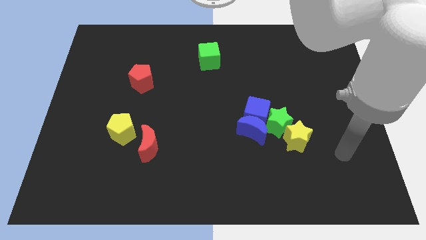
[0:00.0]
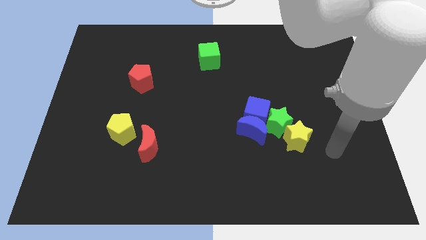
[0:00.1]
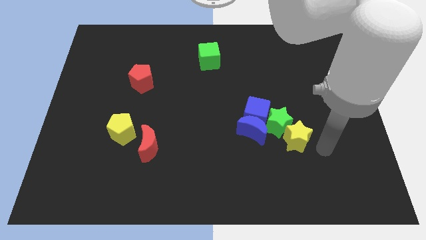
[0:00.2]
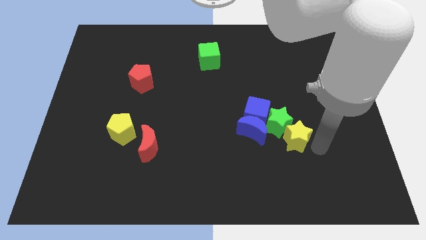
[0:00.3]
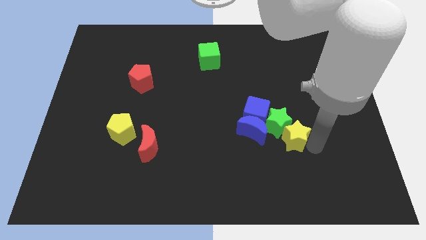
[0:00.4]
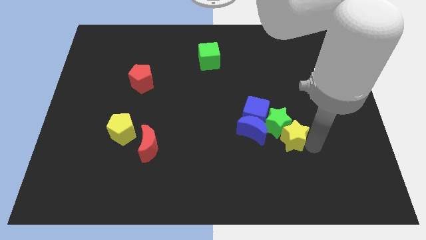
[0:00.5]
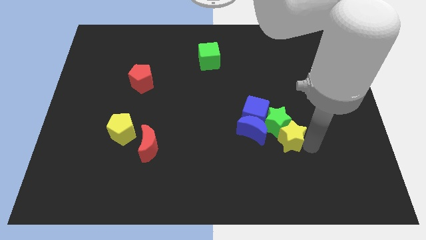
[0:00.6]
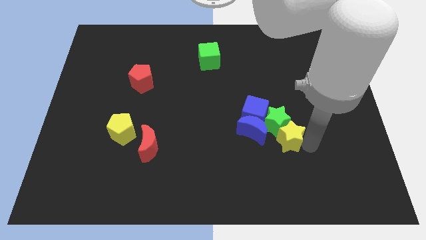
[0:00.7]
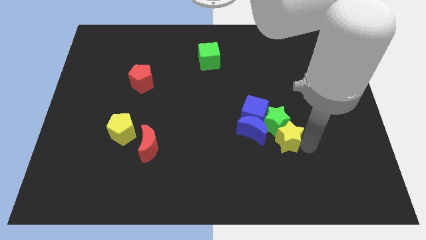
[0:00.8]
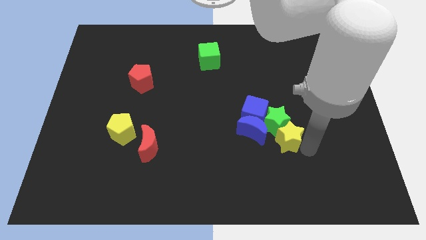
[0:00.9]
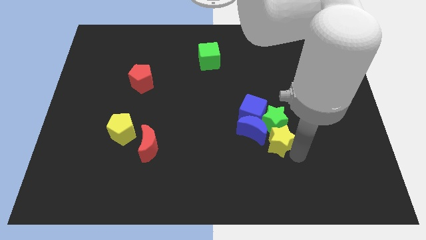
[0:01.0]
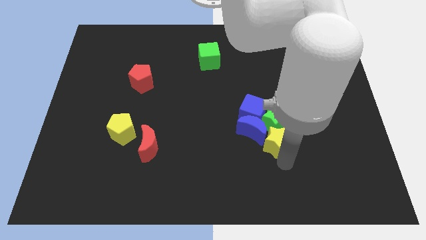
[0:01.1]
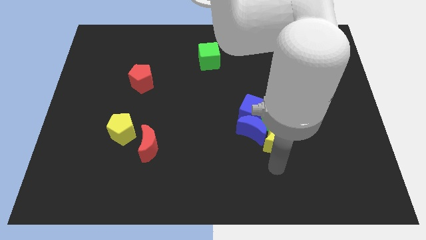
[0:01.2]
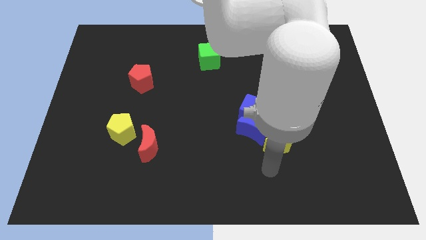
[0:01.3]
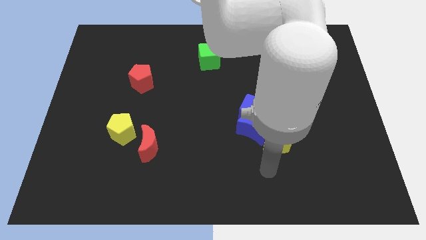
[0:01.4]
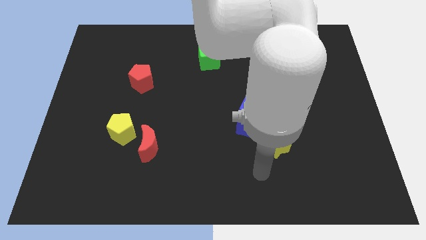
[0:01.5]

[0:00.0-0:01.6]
place the yellow star to the right of the blue crescent

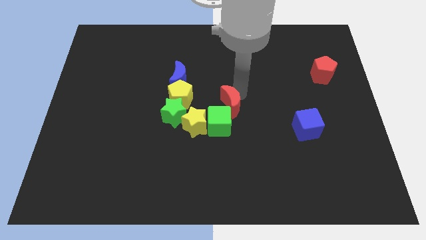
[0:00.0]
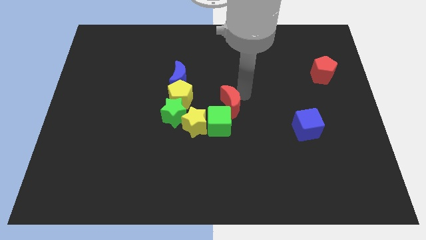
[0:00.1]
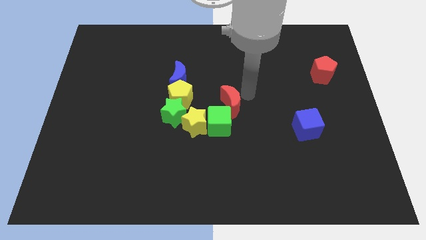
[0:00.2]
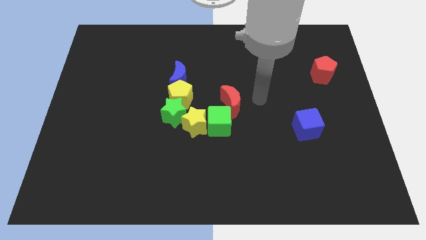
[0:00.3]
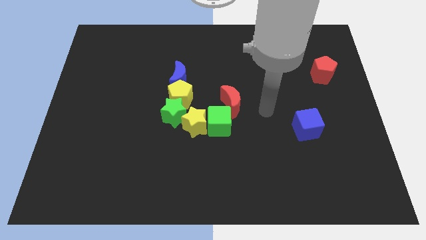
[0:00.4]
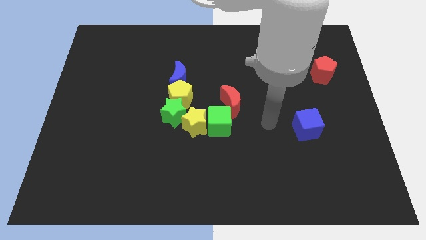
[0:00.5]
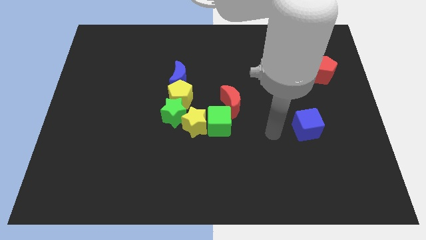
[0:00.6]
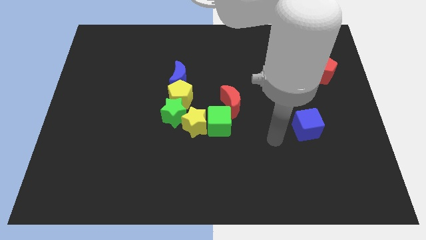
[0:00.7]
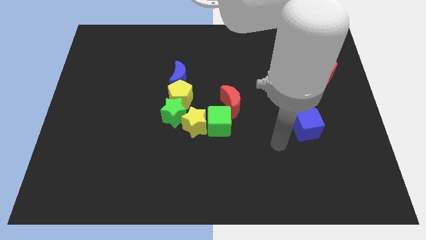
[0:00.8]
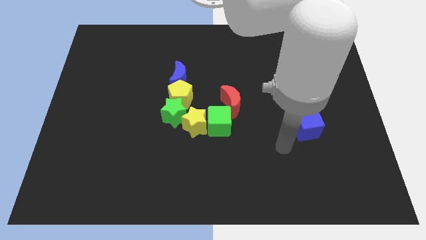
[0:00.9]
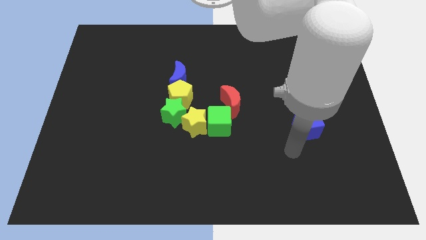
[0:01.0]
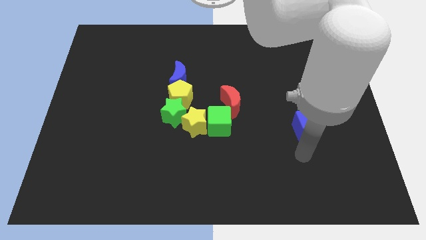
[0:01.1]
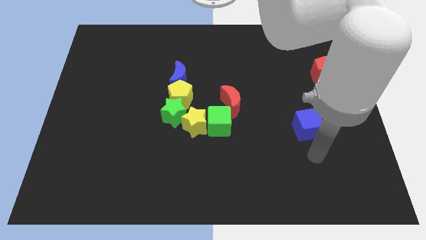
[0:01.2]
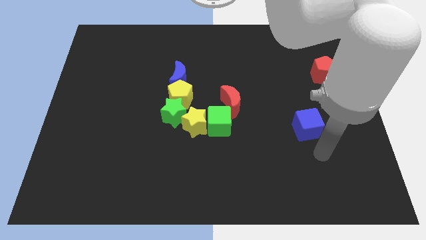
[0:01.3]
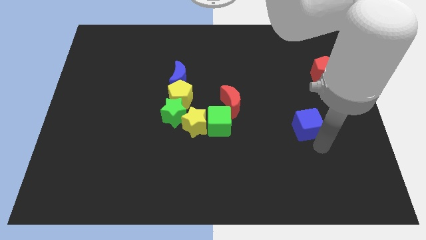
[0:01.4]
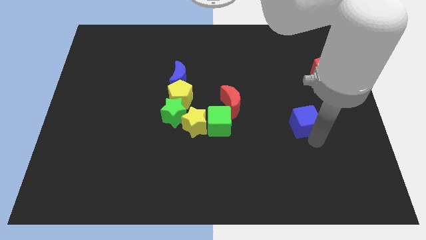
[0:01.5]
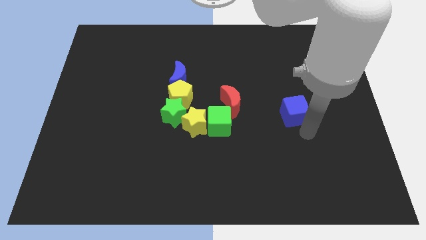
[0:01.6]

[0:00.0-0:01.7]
move the arm down to the blue cube

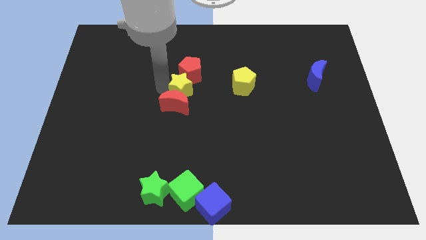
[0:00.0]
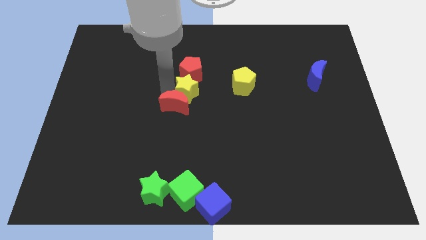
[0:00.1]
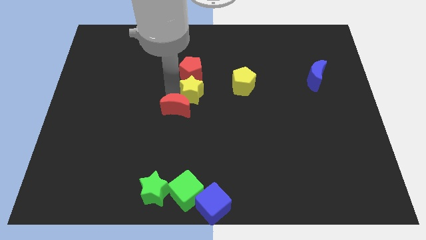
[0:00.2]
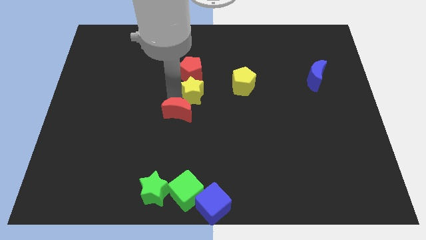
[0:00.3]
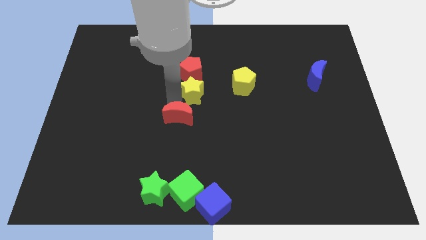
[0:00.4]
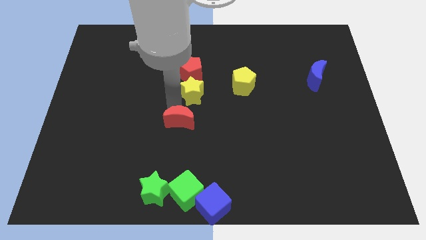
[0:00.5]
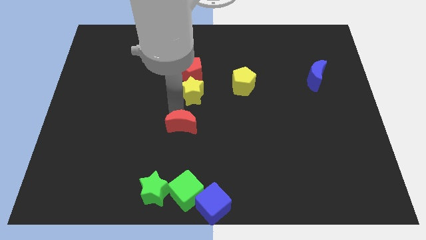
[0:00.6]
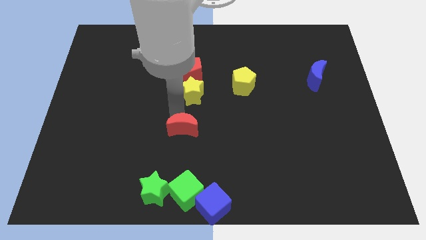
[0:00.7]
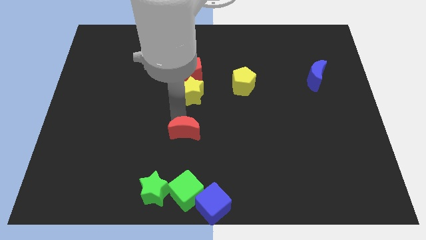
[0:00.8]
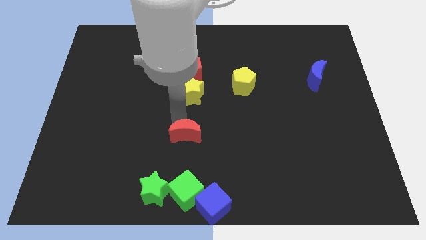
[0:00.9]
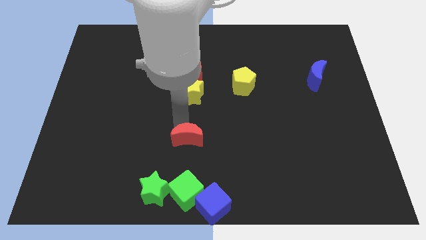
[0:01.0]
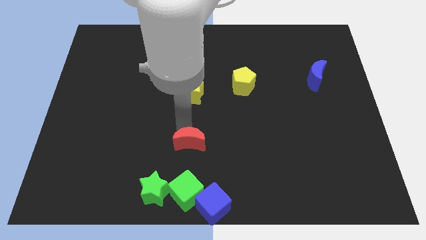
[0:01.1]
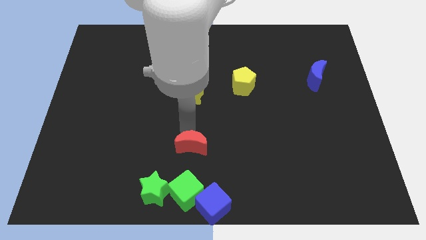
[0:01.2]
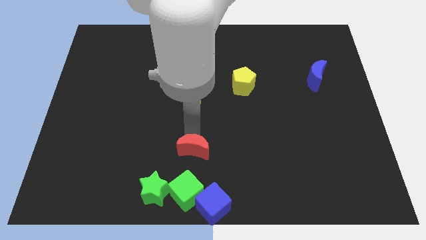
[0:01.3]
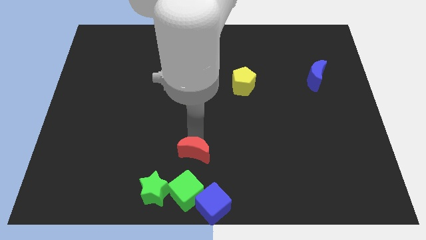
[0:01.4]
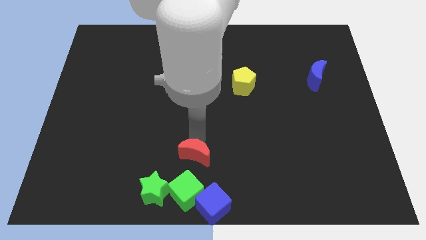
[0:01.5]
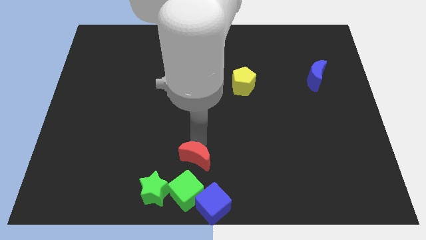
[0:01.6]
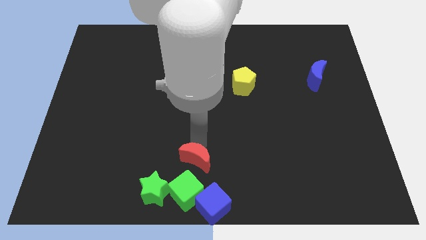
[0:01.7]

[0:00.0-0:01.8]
push the red crescent on top of the green cube

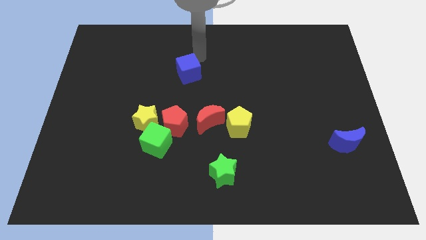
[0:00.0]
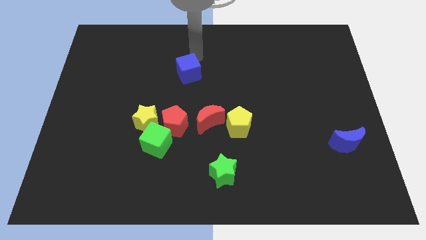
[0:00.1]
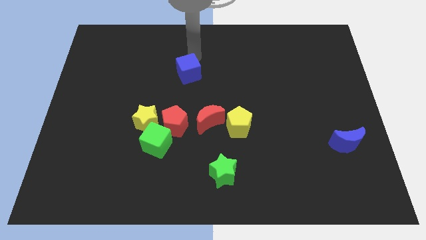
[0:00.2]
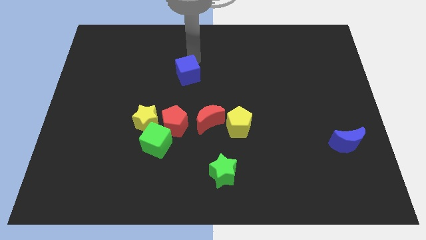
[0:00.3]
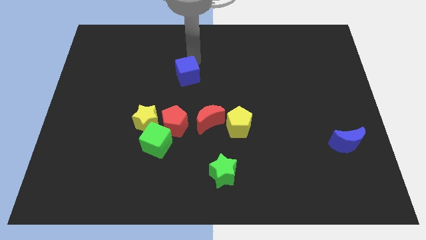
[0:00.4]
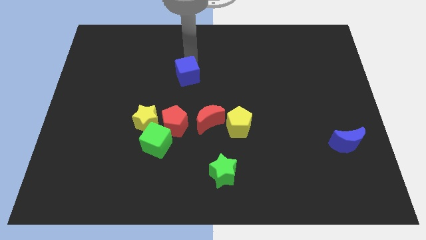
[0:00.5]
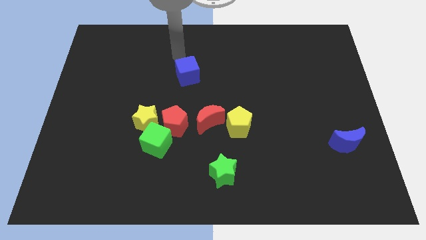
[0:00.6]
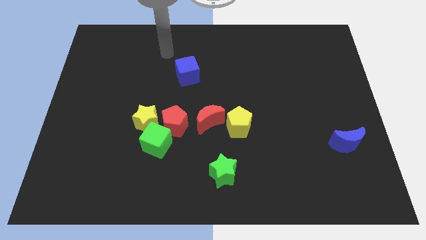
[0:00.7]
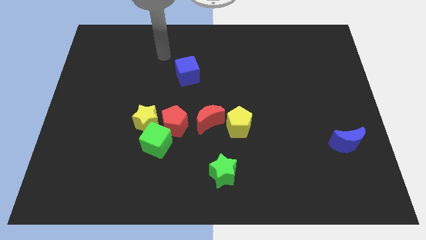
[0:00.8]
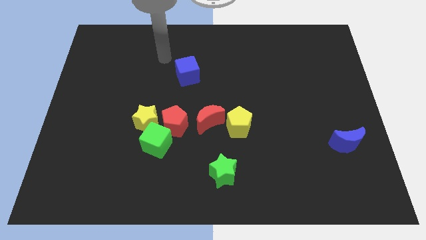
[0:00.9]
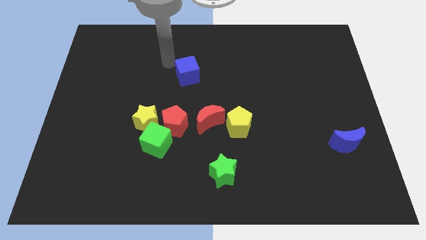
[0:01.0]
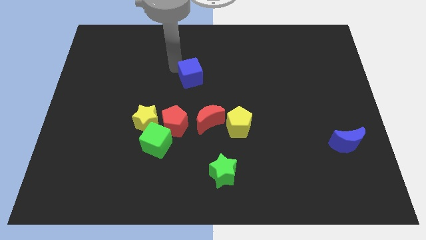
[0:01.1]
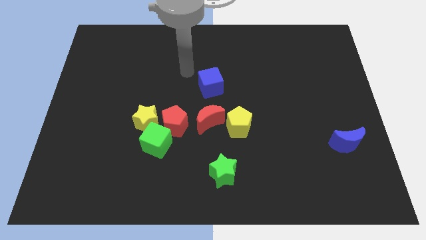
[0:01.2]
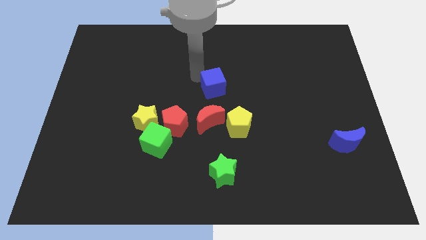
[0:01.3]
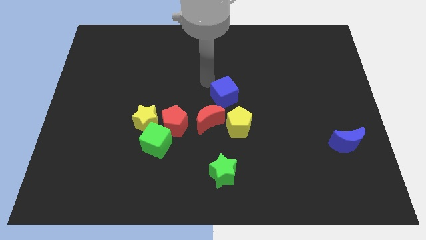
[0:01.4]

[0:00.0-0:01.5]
place the blue cube above the red moon

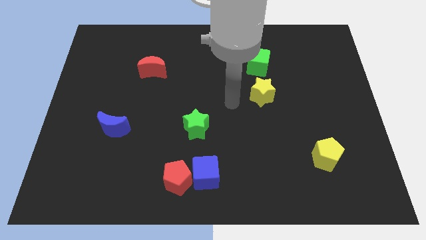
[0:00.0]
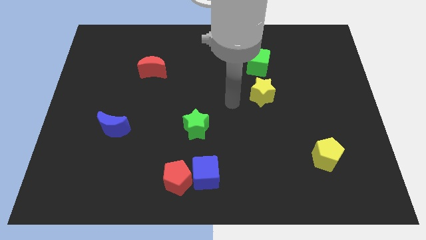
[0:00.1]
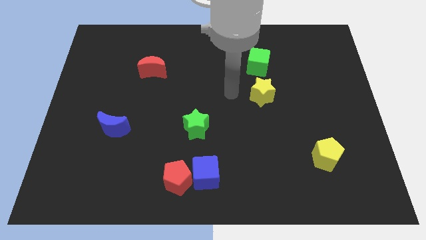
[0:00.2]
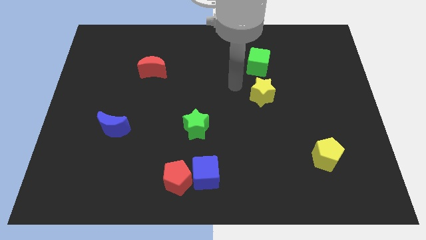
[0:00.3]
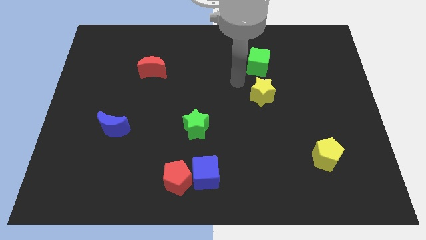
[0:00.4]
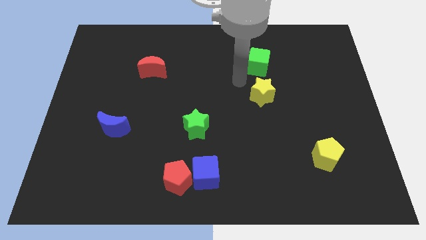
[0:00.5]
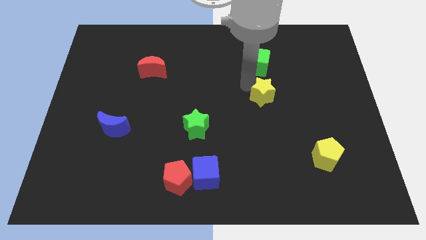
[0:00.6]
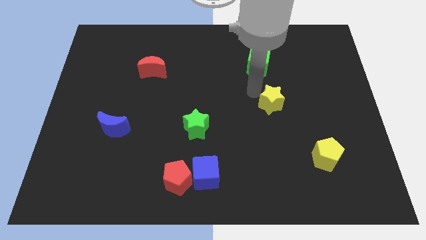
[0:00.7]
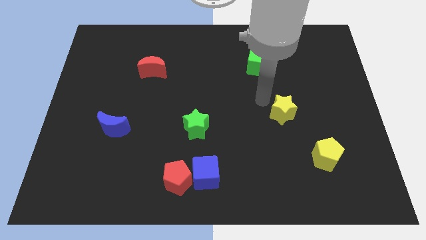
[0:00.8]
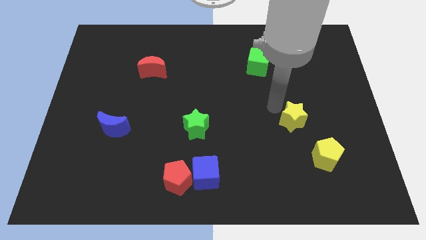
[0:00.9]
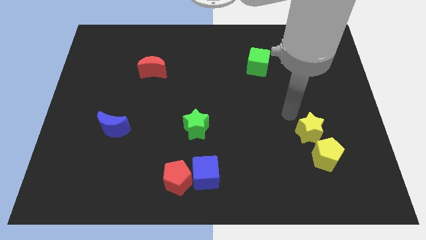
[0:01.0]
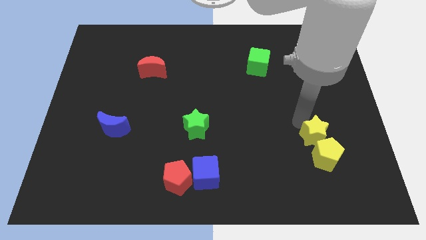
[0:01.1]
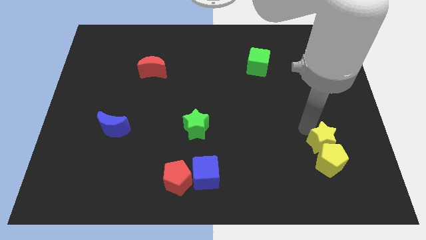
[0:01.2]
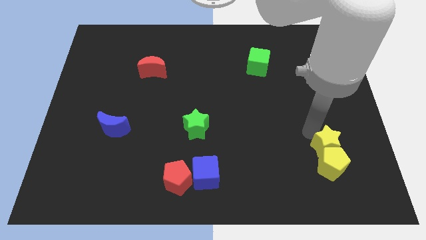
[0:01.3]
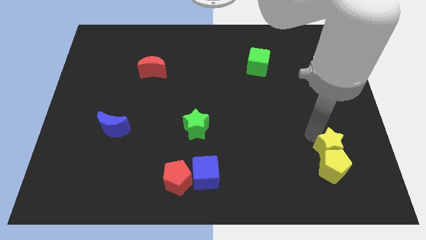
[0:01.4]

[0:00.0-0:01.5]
move the yellow star into the yellow pentagon

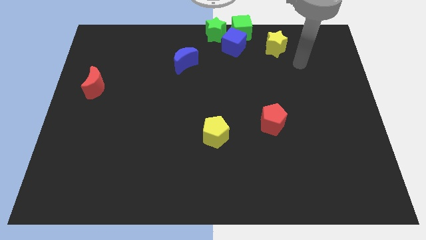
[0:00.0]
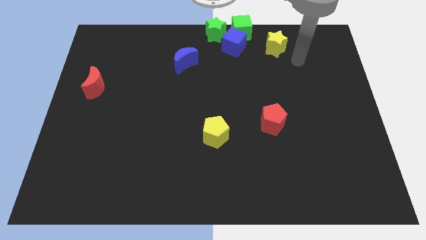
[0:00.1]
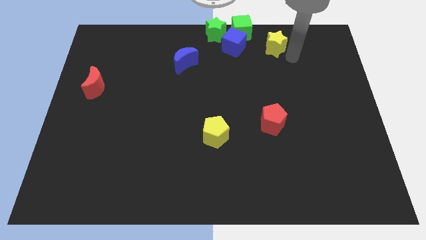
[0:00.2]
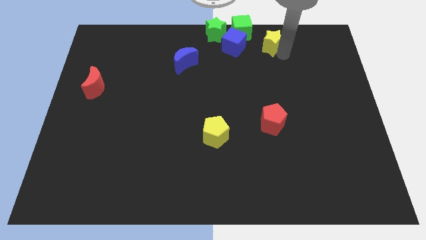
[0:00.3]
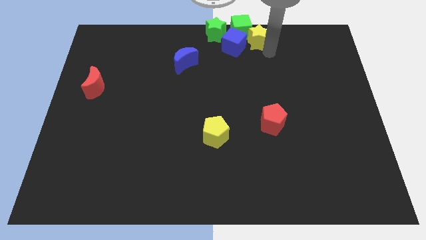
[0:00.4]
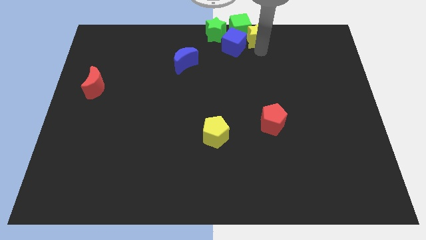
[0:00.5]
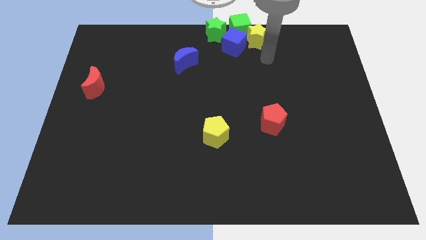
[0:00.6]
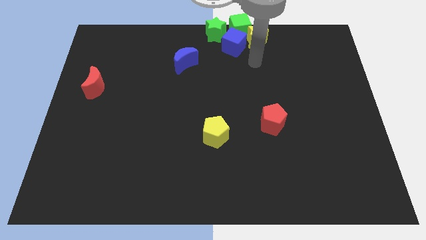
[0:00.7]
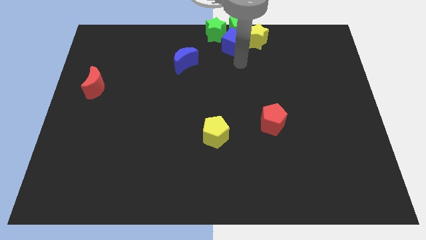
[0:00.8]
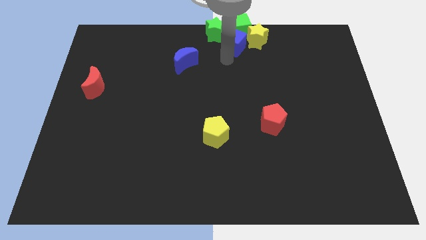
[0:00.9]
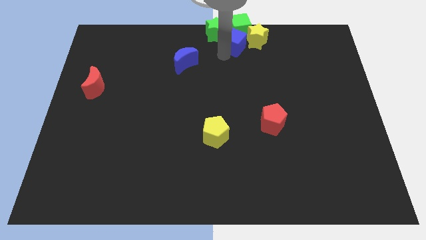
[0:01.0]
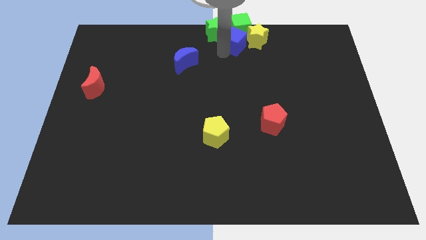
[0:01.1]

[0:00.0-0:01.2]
push the yellow star into the green cube
